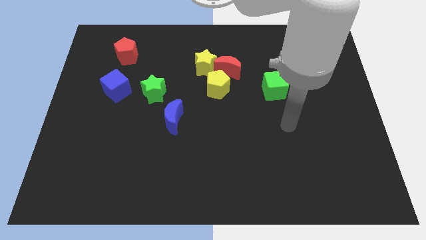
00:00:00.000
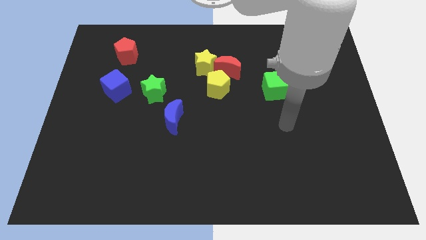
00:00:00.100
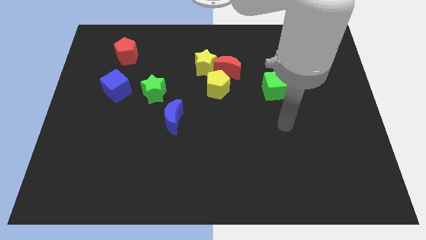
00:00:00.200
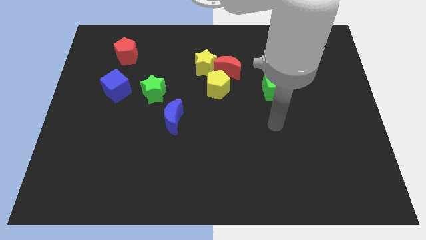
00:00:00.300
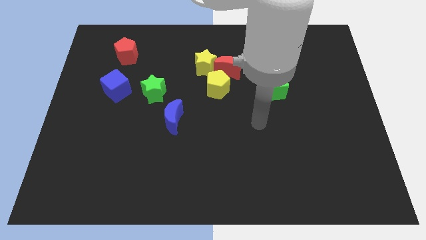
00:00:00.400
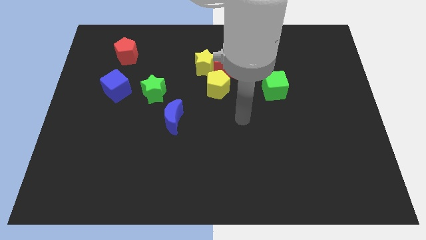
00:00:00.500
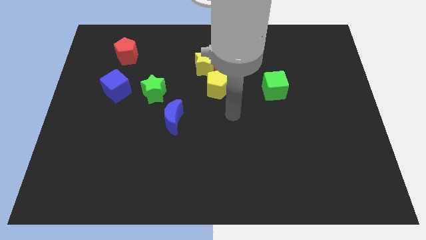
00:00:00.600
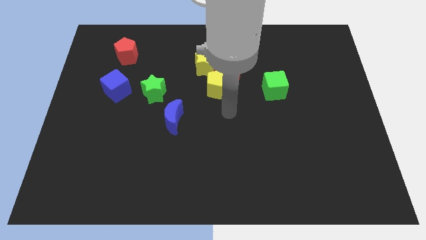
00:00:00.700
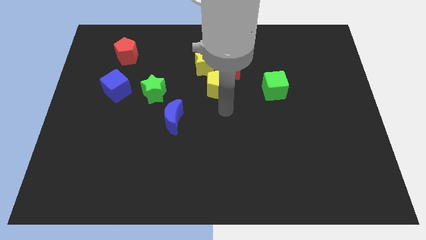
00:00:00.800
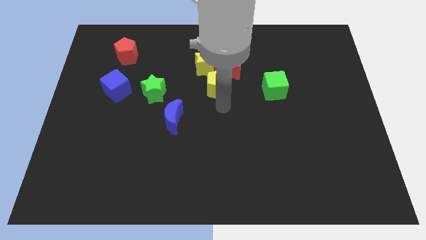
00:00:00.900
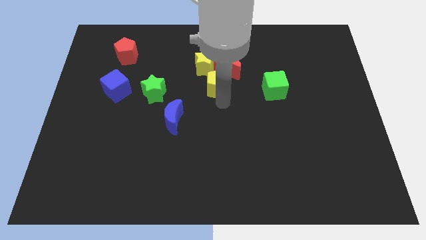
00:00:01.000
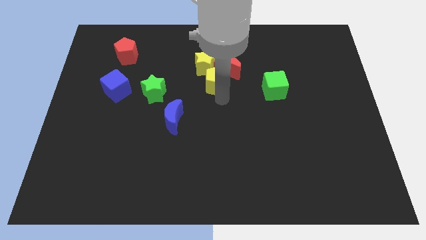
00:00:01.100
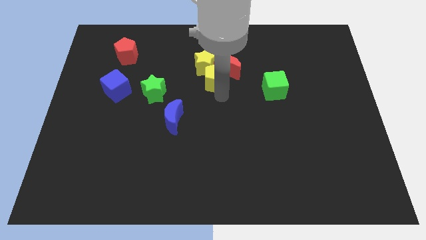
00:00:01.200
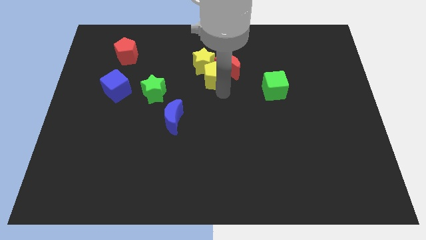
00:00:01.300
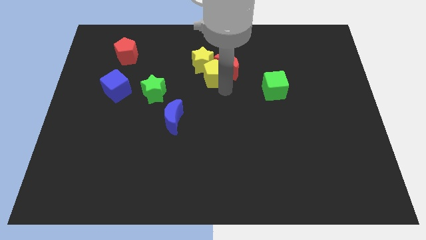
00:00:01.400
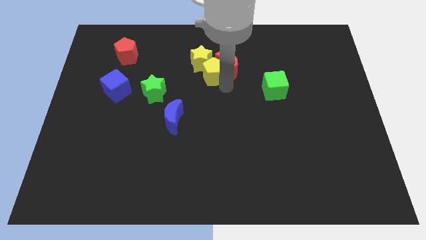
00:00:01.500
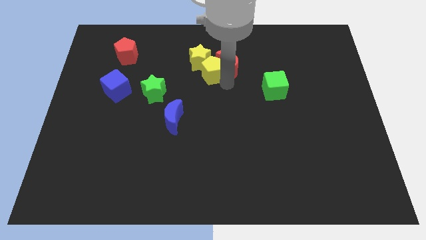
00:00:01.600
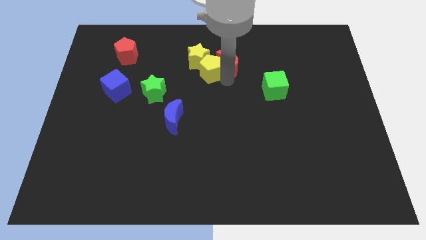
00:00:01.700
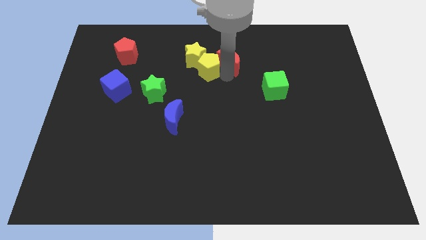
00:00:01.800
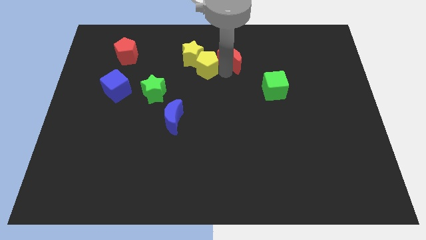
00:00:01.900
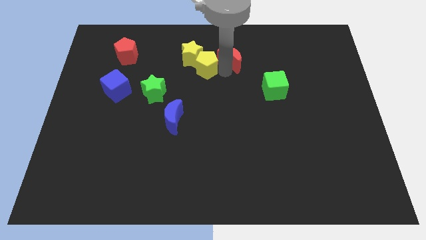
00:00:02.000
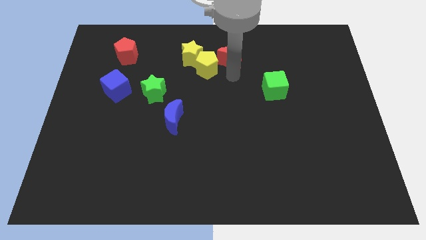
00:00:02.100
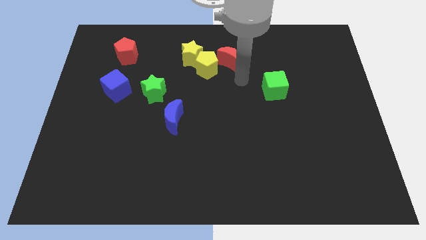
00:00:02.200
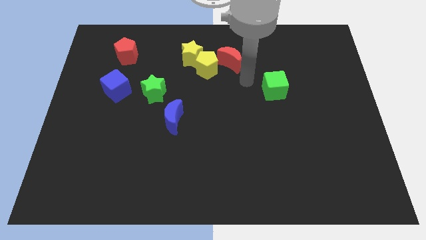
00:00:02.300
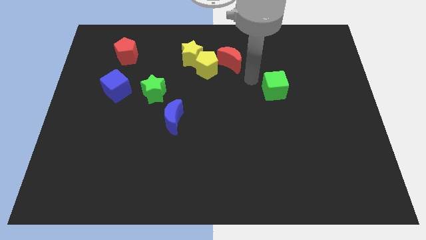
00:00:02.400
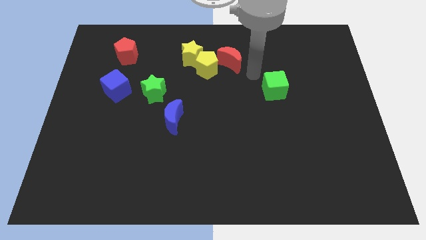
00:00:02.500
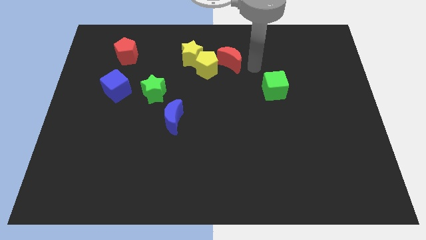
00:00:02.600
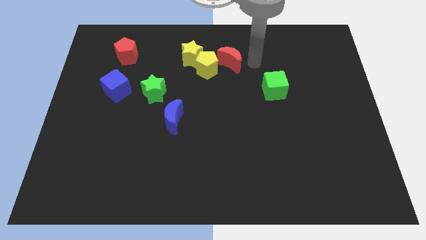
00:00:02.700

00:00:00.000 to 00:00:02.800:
move the yellow pentagon into the bottom right to the yellow star

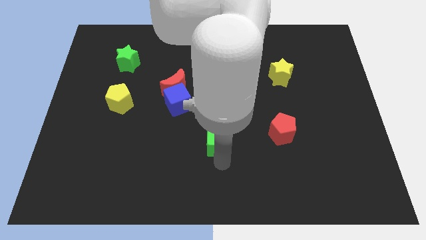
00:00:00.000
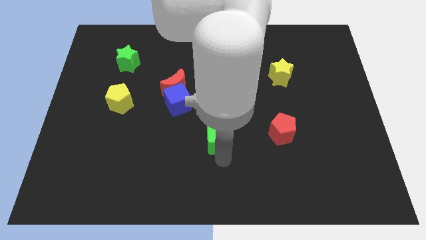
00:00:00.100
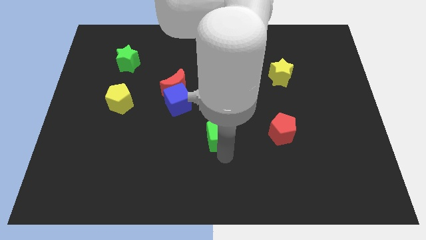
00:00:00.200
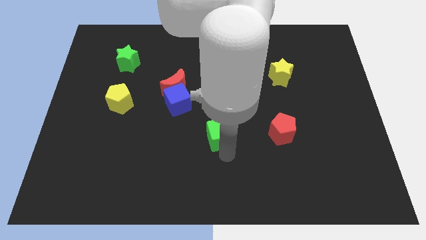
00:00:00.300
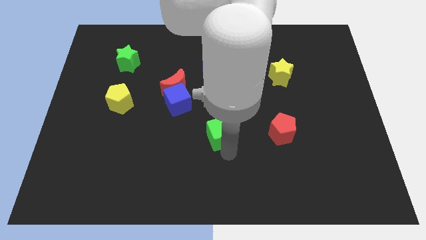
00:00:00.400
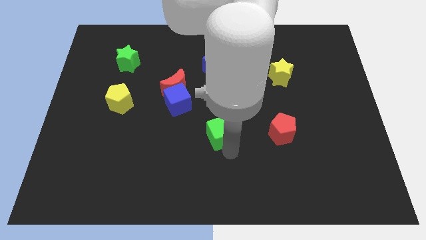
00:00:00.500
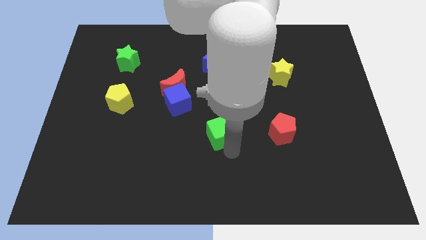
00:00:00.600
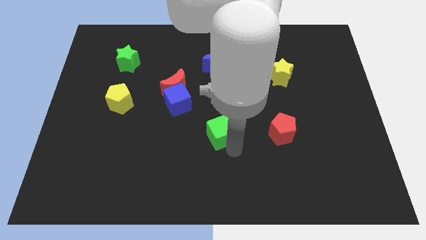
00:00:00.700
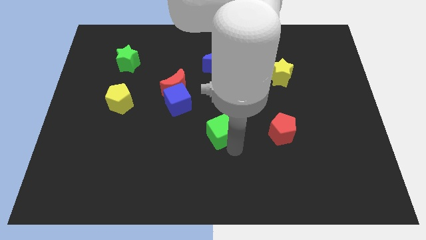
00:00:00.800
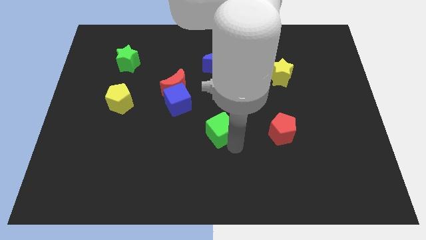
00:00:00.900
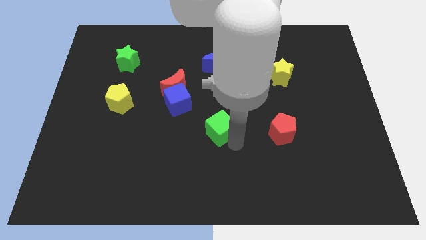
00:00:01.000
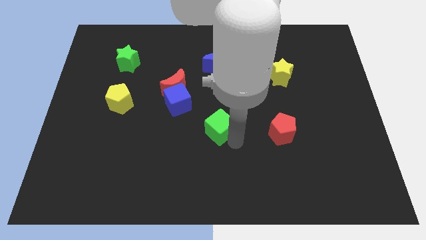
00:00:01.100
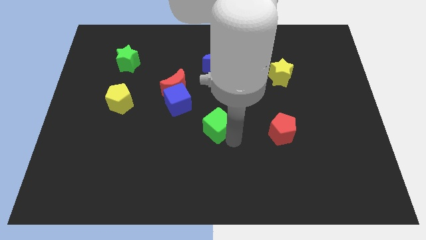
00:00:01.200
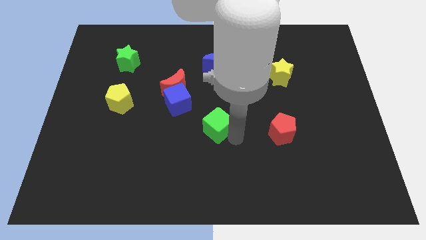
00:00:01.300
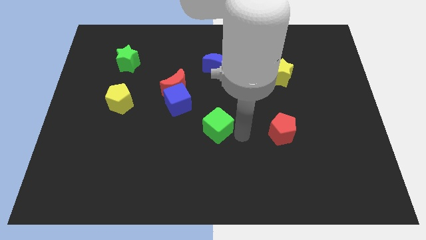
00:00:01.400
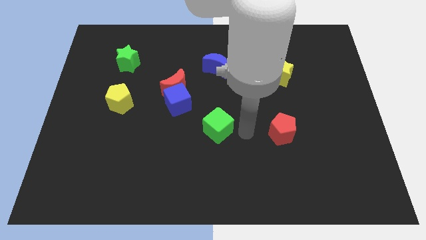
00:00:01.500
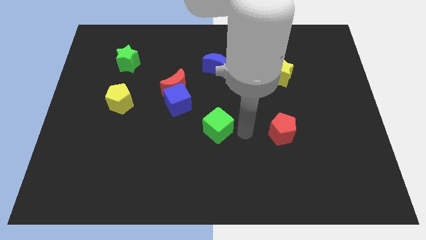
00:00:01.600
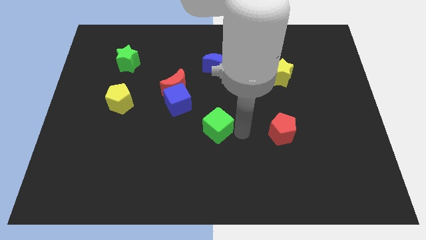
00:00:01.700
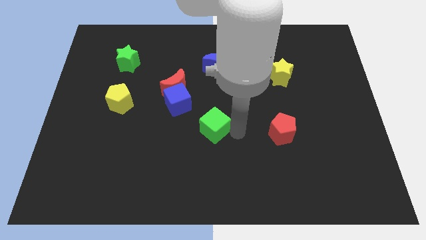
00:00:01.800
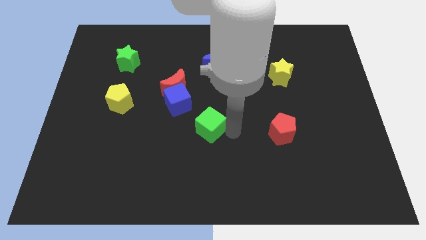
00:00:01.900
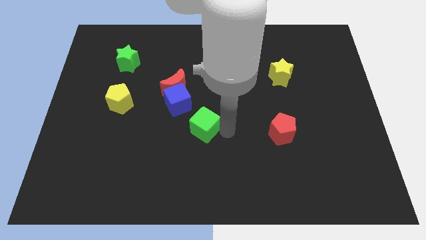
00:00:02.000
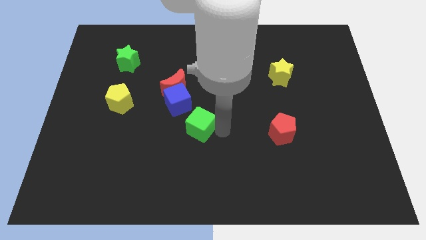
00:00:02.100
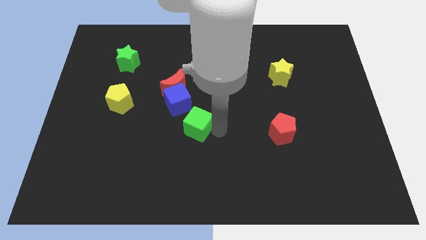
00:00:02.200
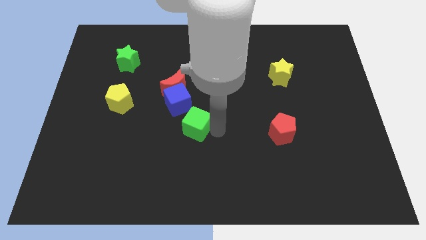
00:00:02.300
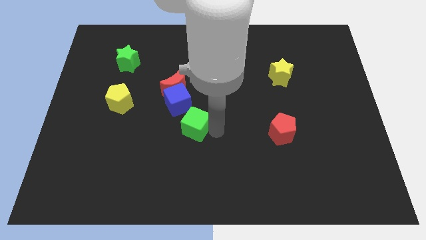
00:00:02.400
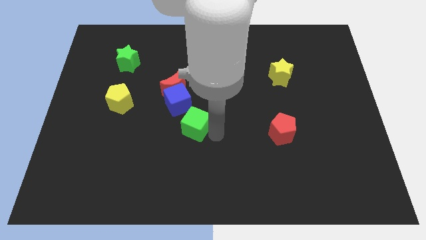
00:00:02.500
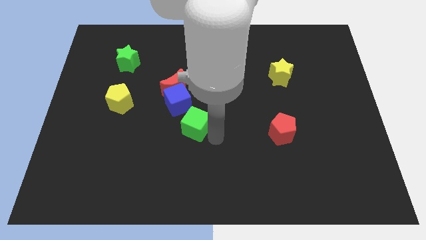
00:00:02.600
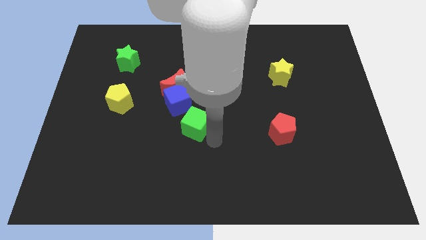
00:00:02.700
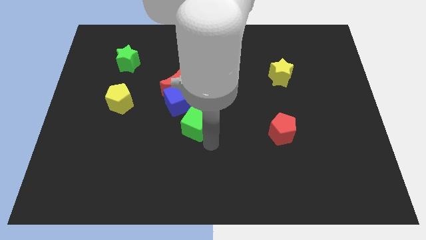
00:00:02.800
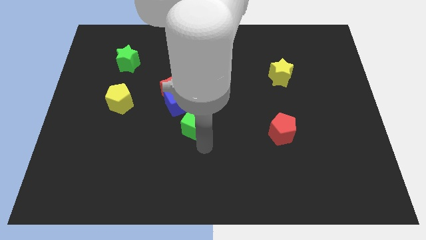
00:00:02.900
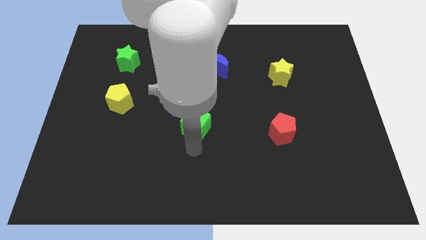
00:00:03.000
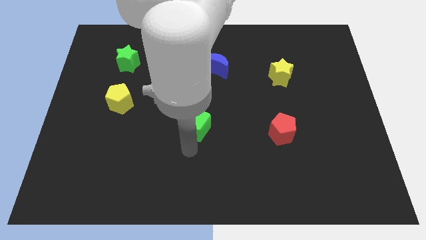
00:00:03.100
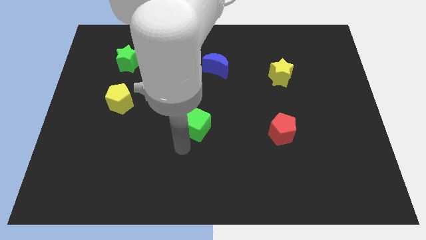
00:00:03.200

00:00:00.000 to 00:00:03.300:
push the green cube to the bottom right of the blue cube

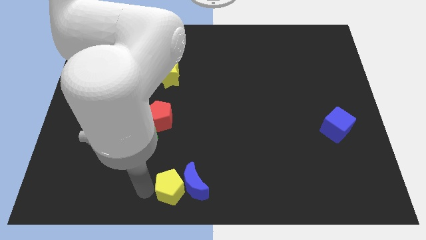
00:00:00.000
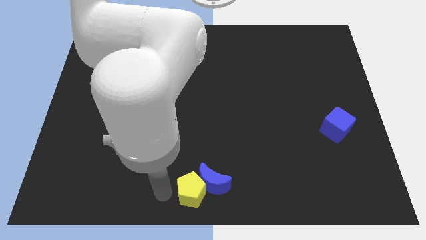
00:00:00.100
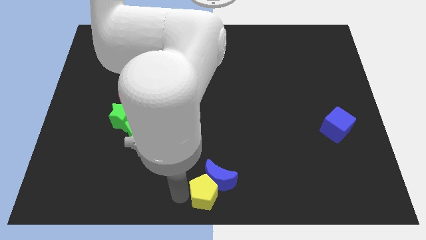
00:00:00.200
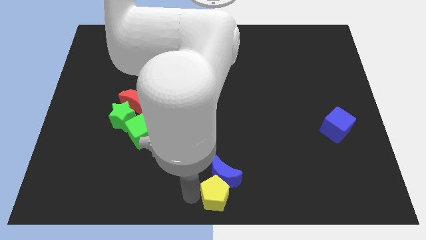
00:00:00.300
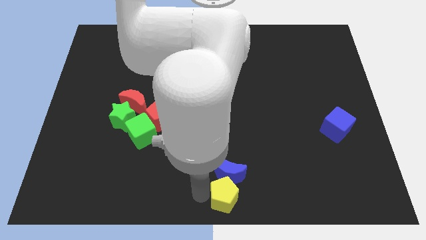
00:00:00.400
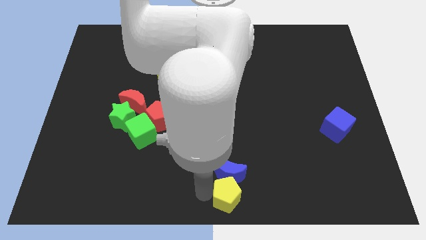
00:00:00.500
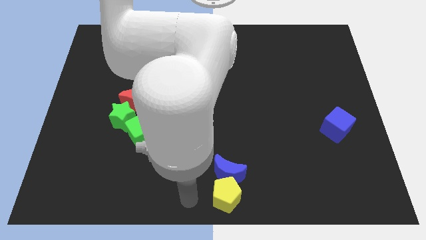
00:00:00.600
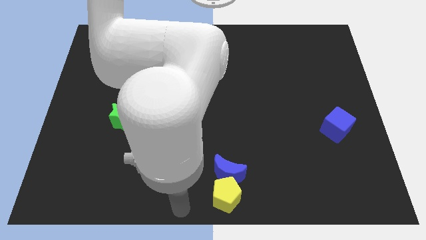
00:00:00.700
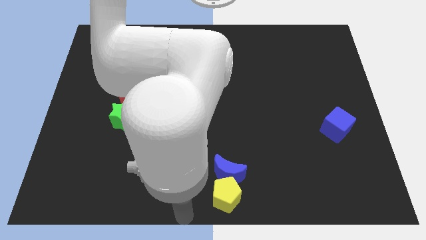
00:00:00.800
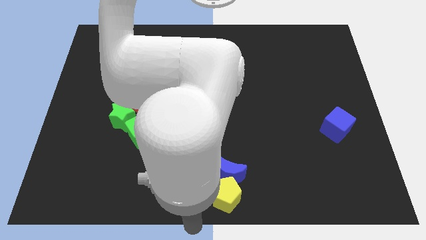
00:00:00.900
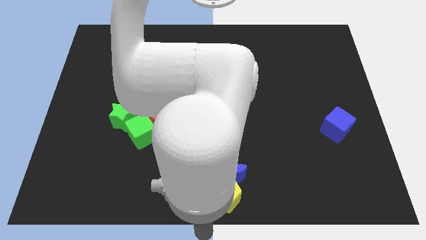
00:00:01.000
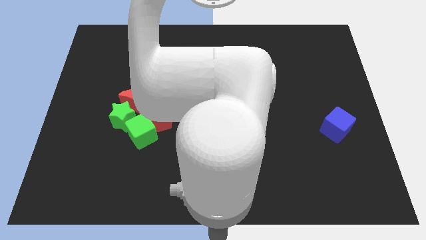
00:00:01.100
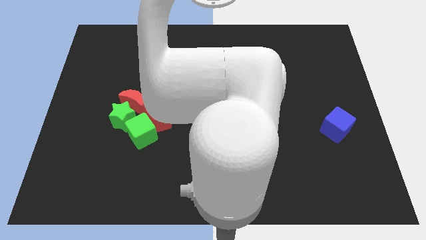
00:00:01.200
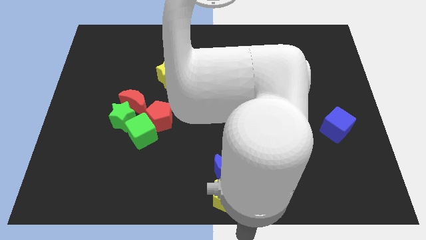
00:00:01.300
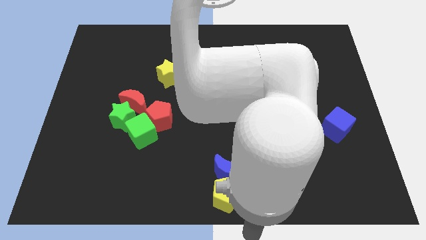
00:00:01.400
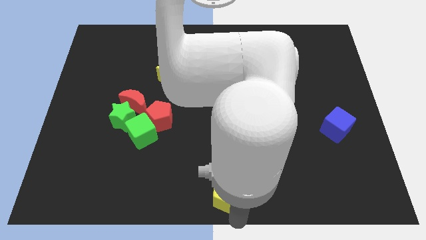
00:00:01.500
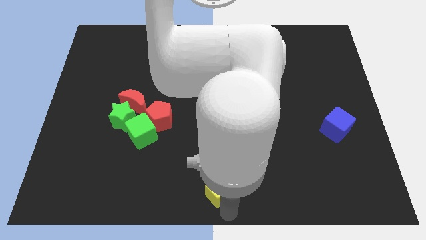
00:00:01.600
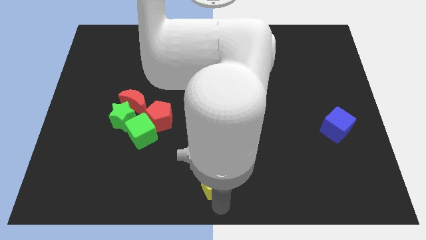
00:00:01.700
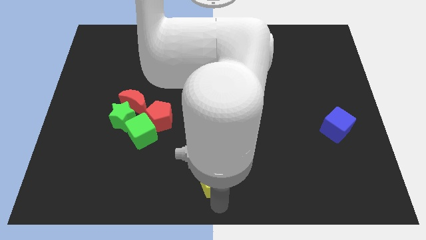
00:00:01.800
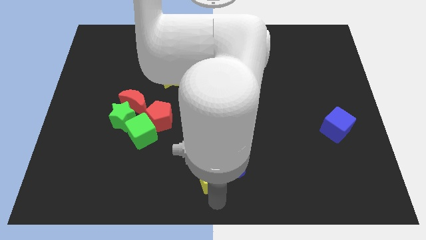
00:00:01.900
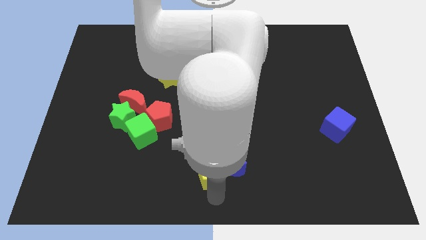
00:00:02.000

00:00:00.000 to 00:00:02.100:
place the yellow pentagon and blue crescent slightly upwards from the bottom center

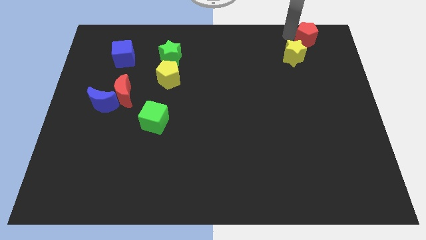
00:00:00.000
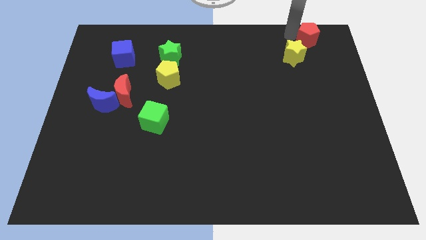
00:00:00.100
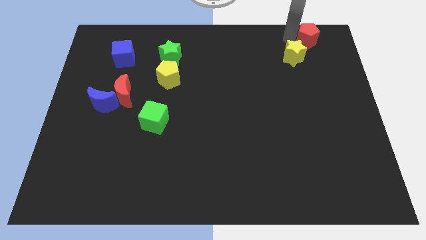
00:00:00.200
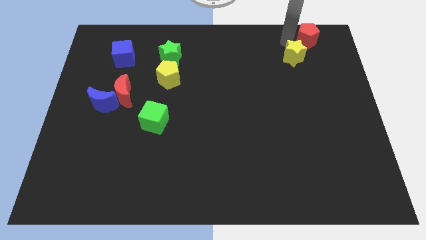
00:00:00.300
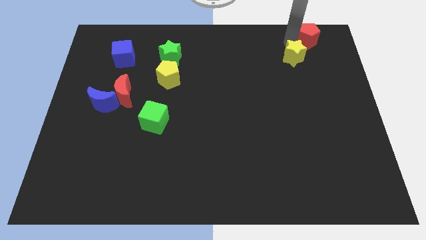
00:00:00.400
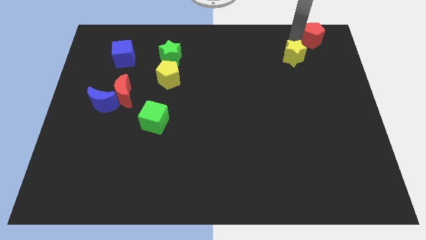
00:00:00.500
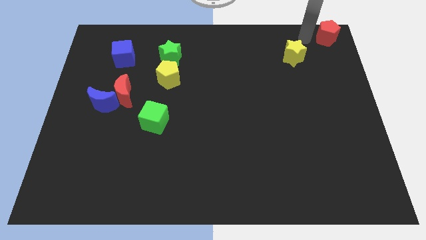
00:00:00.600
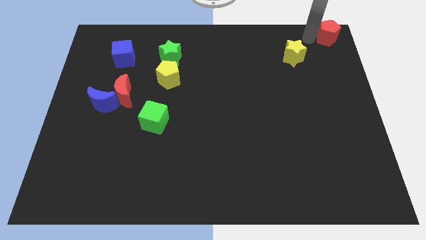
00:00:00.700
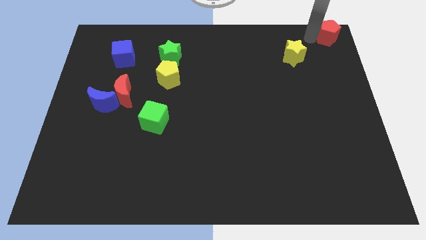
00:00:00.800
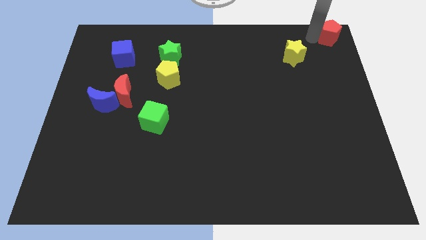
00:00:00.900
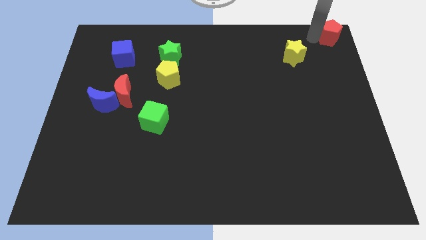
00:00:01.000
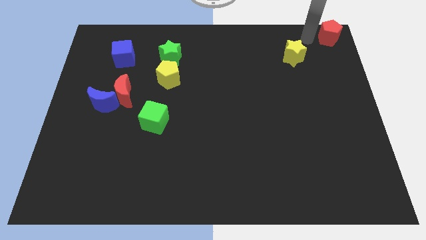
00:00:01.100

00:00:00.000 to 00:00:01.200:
slightly push the red pentagon towards the top right of the board
